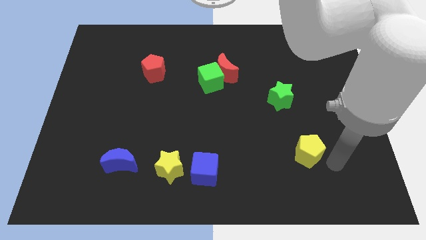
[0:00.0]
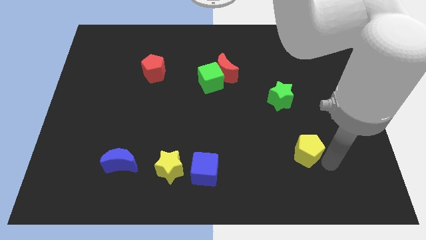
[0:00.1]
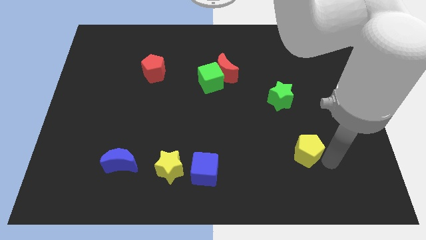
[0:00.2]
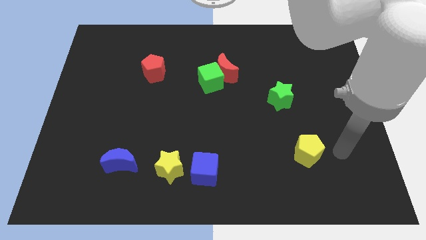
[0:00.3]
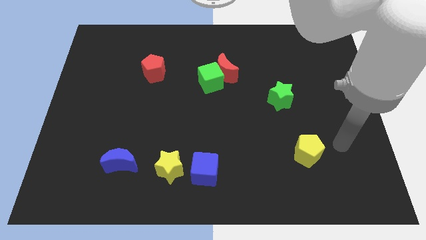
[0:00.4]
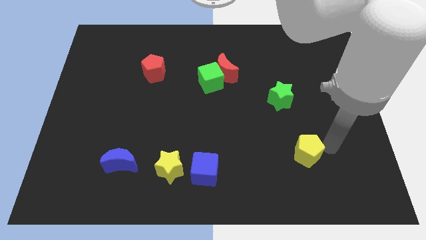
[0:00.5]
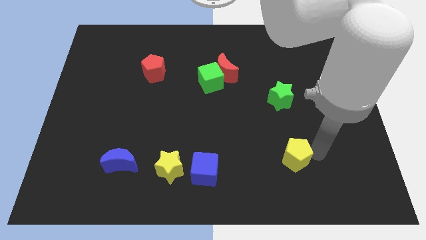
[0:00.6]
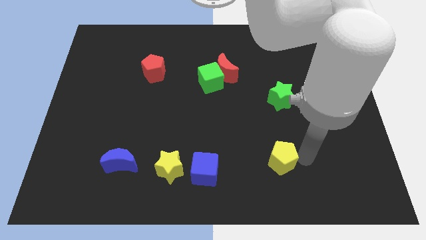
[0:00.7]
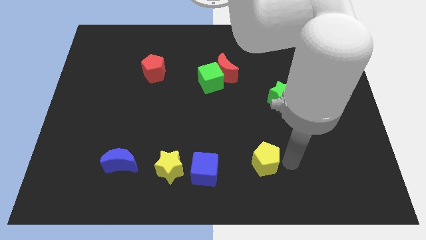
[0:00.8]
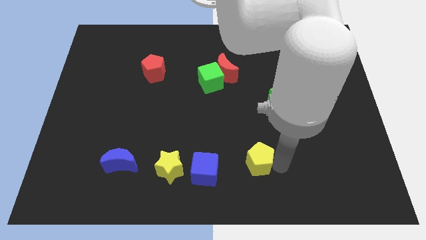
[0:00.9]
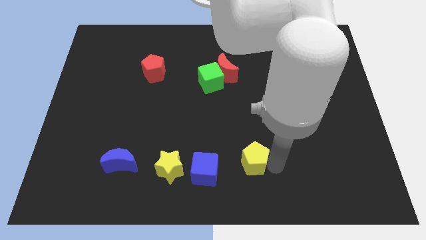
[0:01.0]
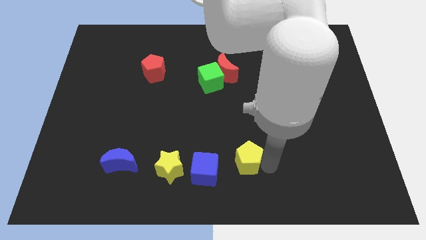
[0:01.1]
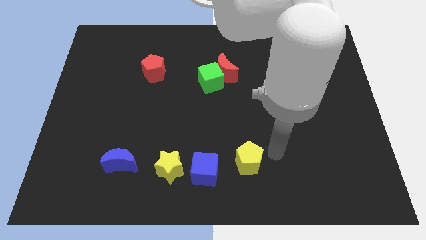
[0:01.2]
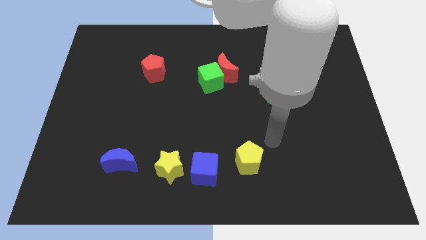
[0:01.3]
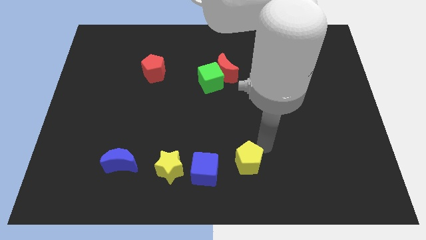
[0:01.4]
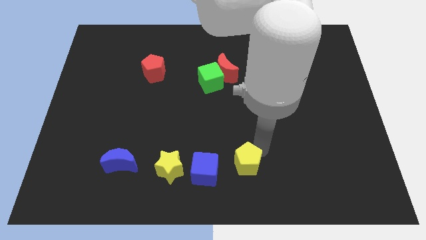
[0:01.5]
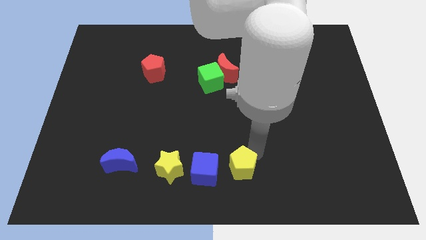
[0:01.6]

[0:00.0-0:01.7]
push the yellow pentagon towards the right side of the blue cube

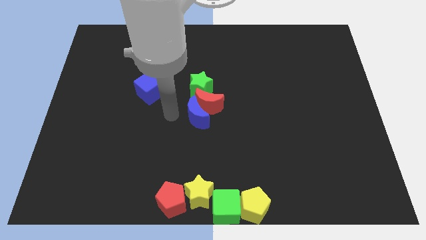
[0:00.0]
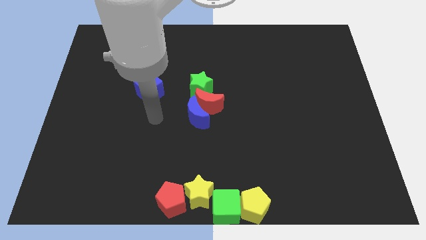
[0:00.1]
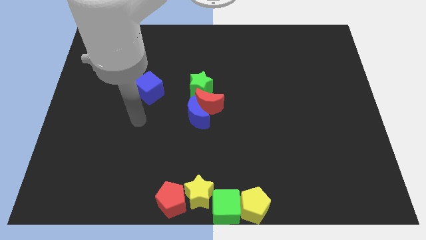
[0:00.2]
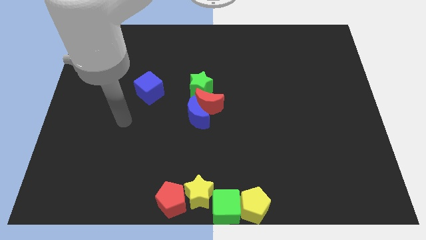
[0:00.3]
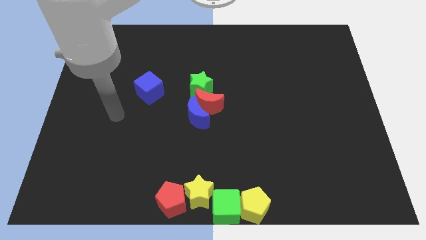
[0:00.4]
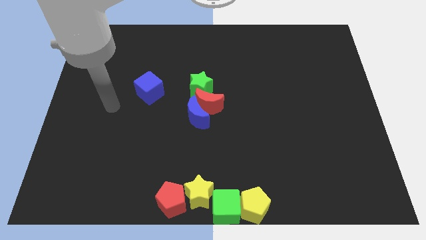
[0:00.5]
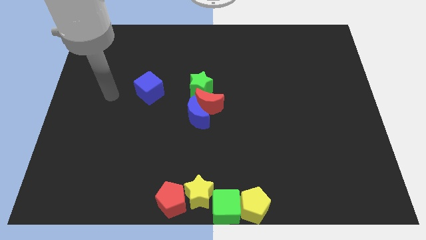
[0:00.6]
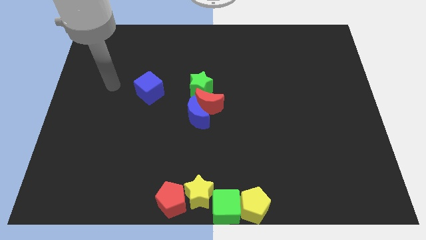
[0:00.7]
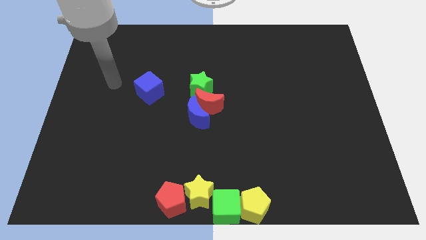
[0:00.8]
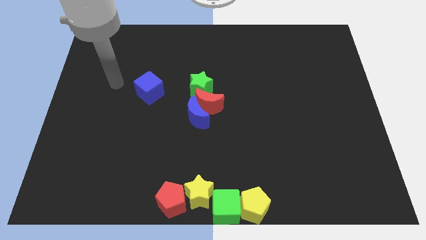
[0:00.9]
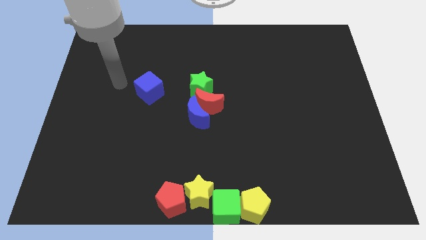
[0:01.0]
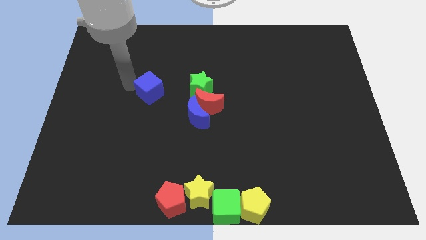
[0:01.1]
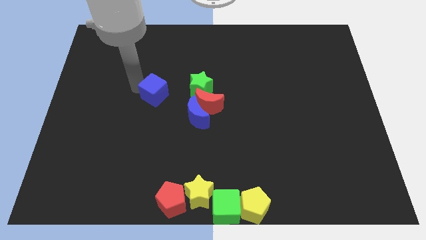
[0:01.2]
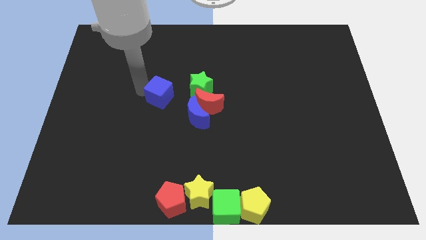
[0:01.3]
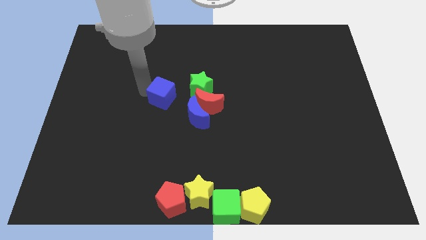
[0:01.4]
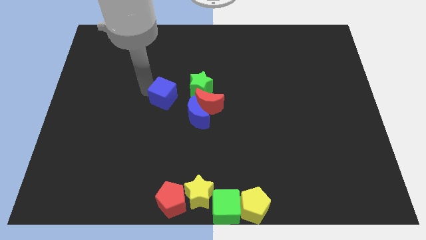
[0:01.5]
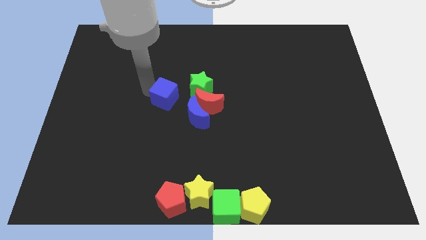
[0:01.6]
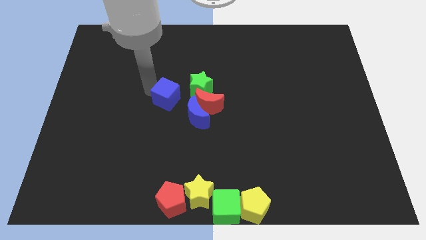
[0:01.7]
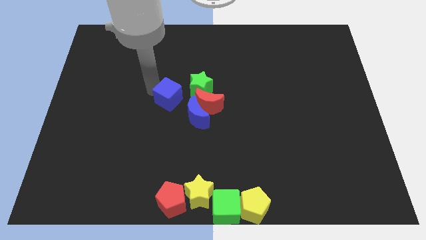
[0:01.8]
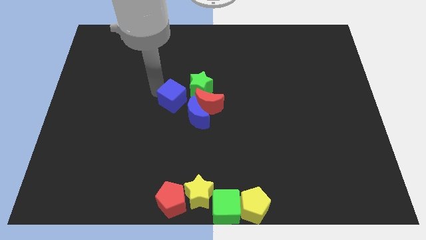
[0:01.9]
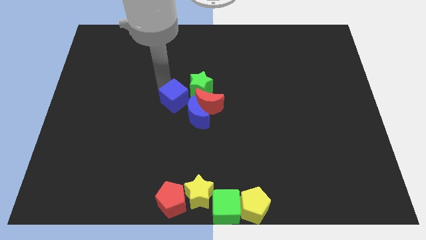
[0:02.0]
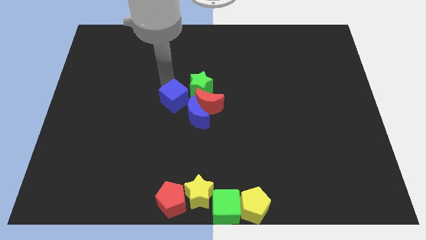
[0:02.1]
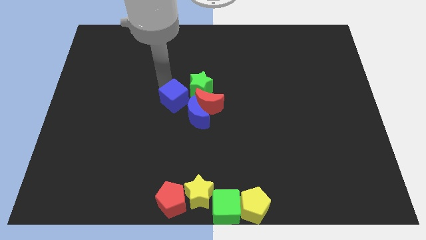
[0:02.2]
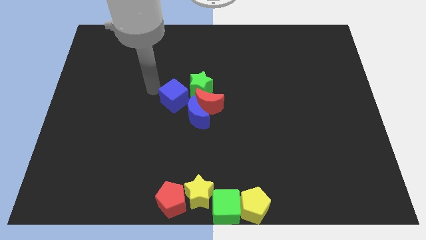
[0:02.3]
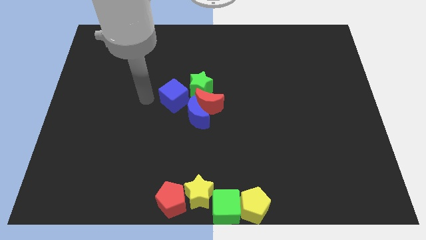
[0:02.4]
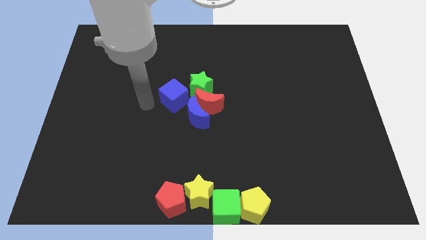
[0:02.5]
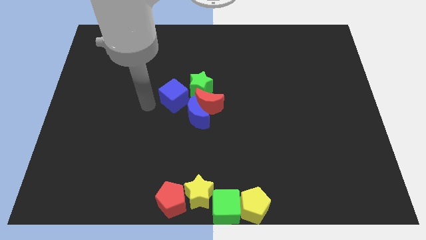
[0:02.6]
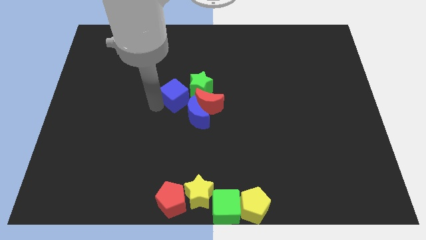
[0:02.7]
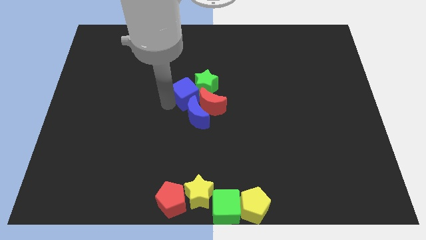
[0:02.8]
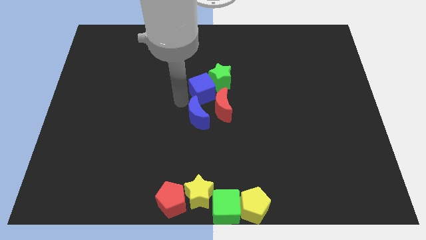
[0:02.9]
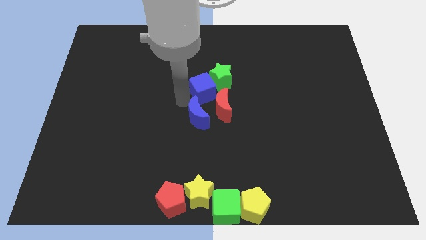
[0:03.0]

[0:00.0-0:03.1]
add the blue cube in to green star

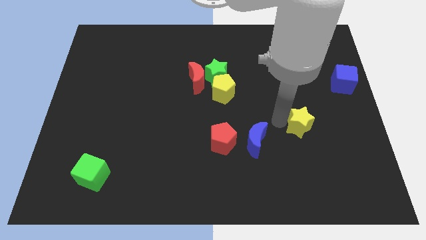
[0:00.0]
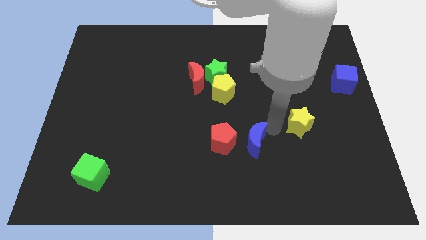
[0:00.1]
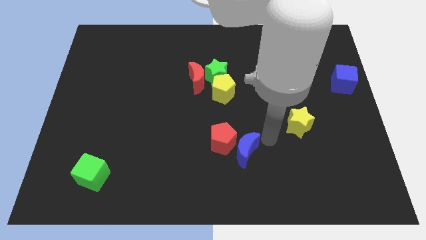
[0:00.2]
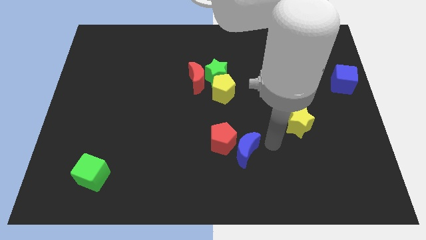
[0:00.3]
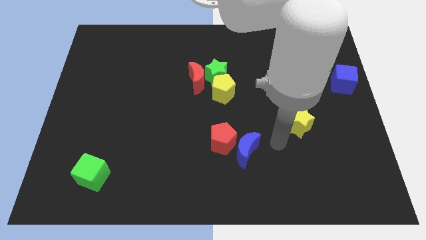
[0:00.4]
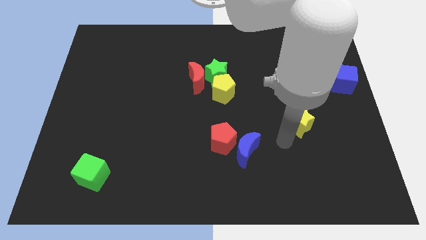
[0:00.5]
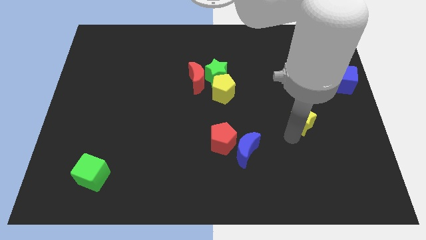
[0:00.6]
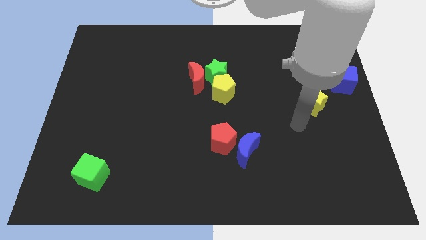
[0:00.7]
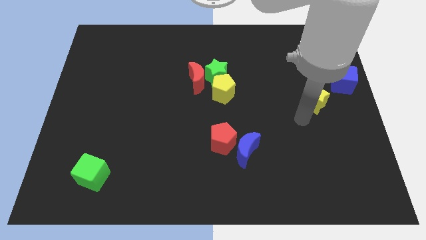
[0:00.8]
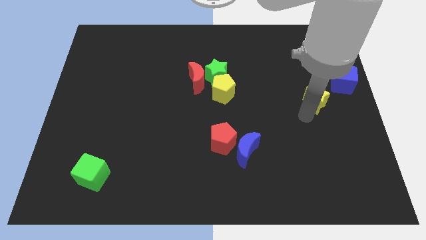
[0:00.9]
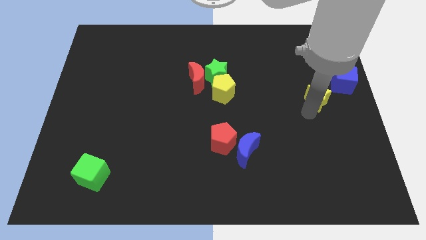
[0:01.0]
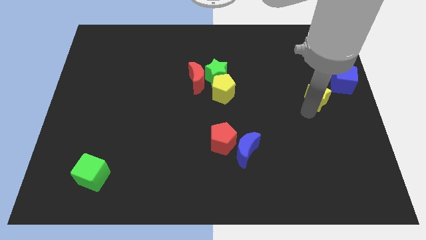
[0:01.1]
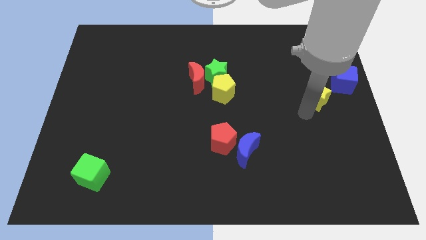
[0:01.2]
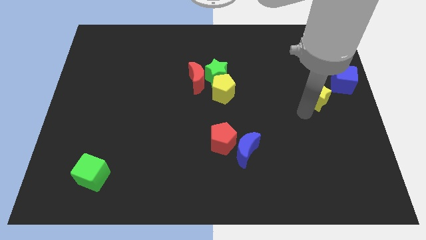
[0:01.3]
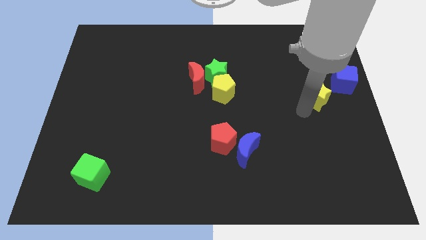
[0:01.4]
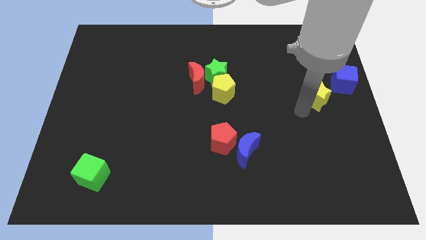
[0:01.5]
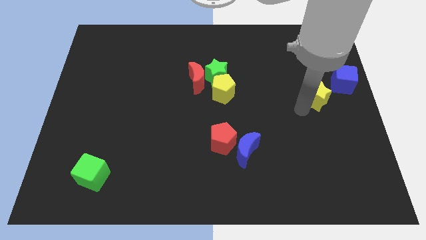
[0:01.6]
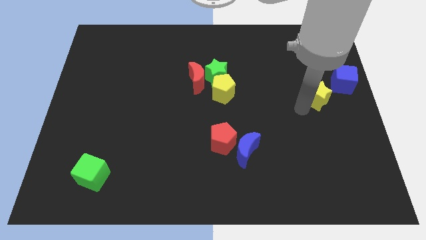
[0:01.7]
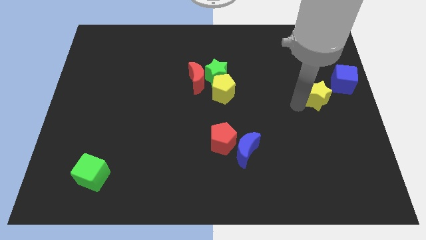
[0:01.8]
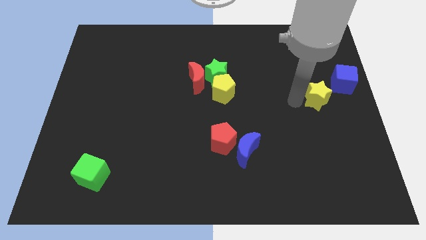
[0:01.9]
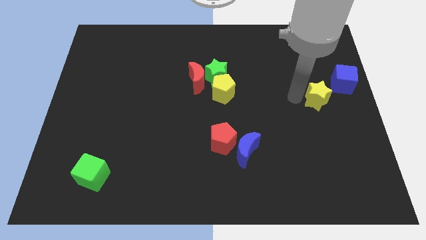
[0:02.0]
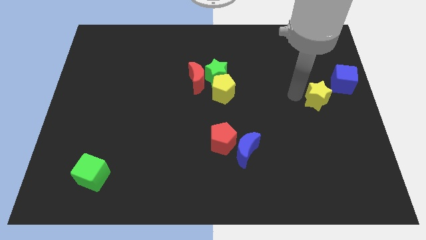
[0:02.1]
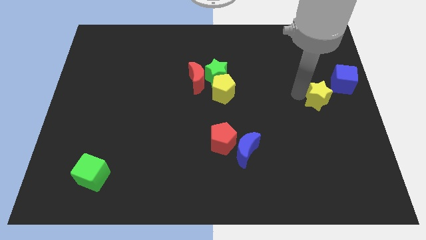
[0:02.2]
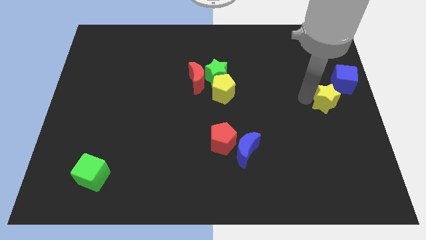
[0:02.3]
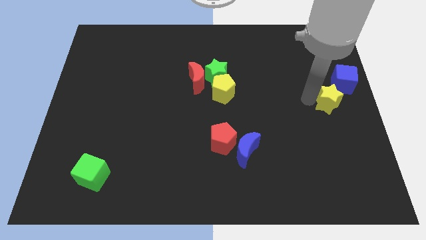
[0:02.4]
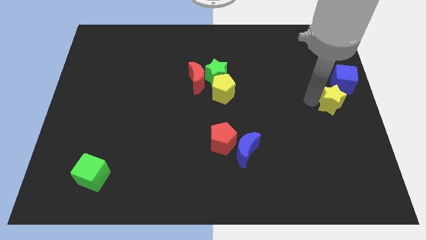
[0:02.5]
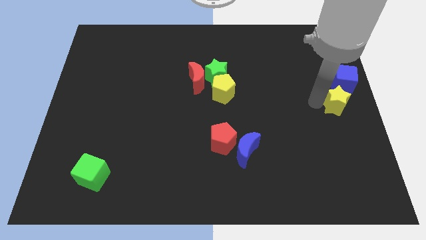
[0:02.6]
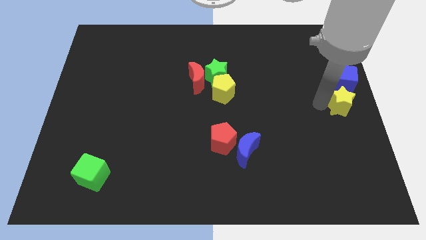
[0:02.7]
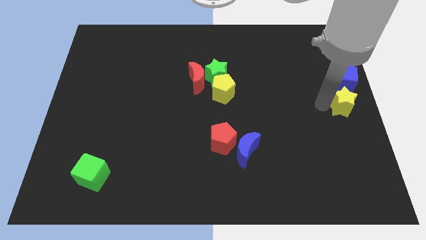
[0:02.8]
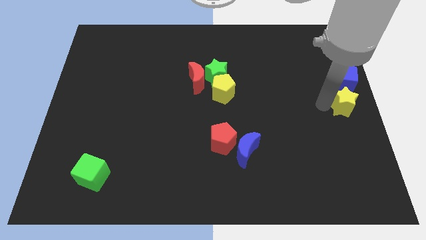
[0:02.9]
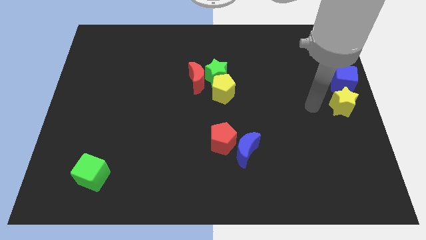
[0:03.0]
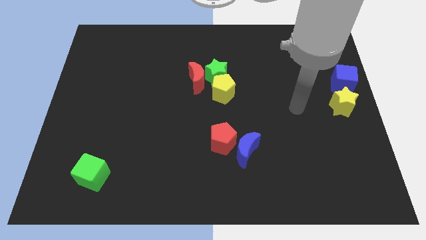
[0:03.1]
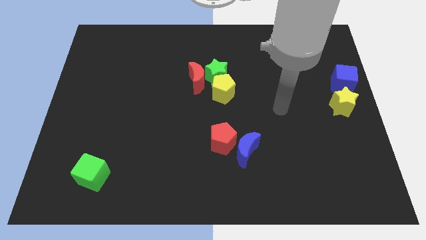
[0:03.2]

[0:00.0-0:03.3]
push the yellow star to the bottom of the blue cube

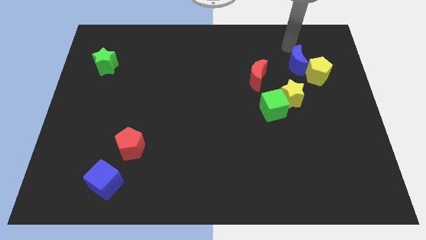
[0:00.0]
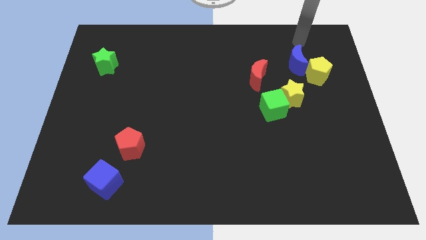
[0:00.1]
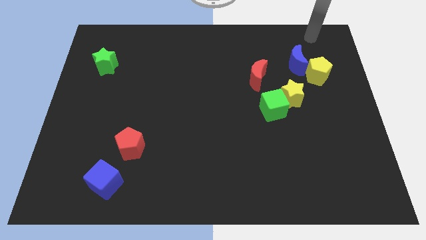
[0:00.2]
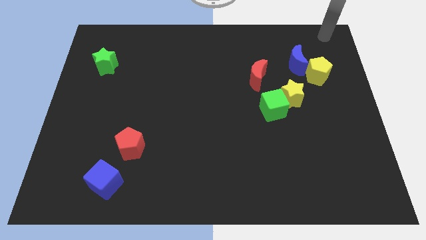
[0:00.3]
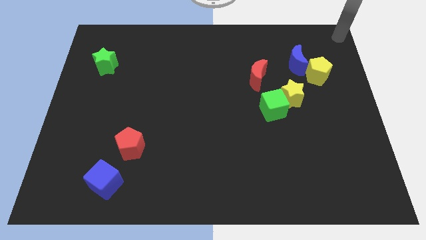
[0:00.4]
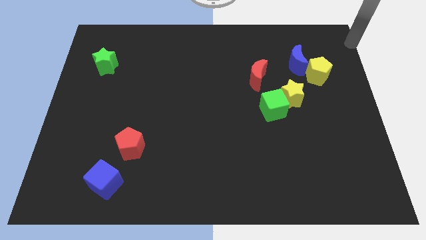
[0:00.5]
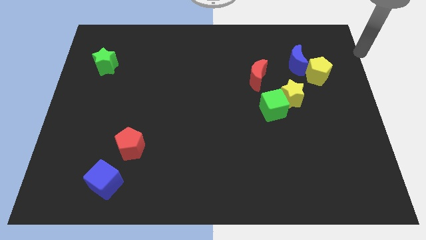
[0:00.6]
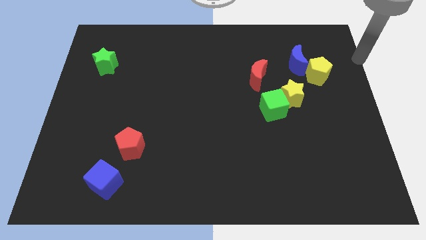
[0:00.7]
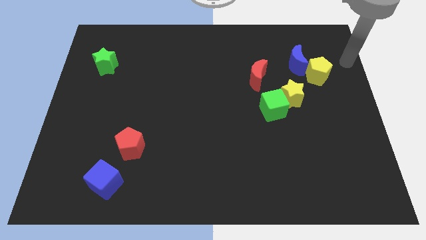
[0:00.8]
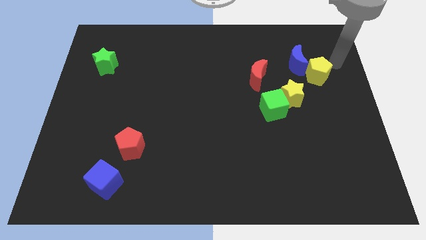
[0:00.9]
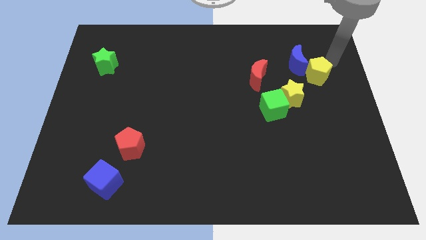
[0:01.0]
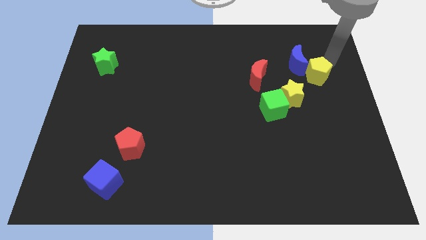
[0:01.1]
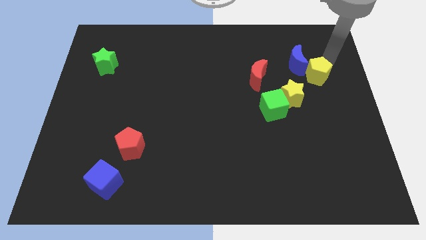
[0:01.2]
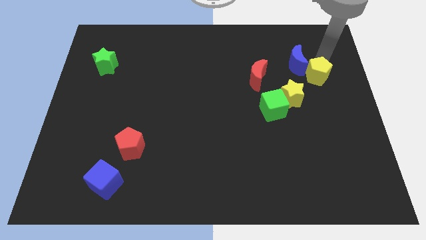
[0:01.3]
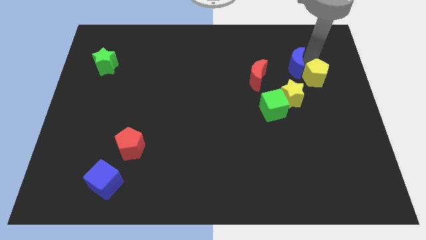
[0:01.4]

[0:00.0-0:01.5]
place your arm on the top of yellow pentagon
